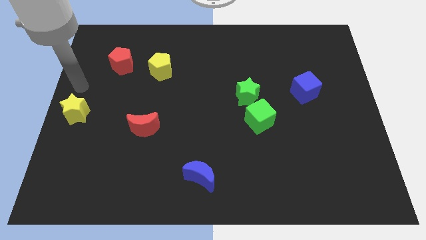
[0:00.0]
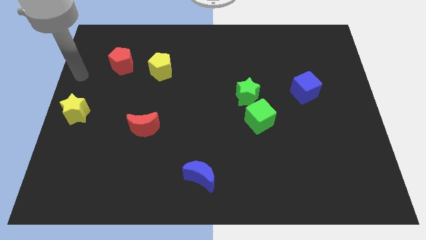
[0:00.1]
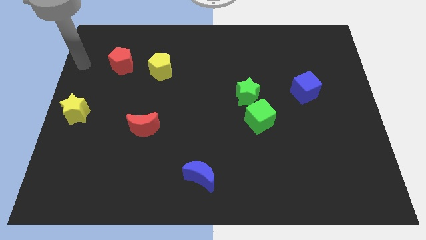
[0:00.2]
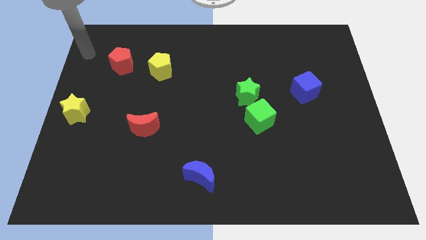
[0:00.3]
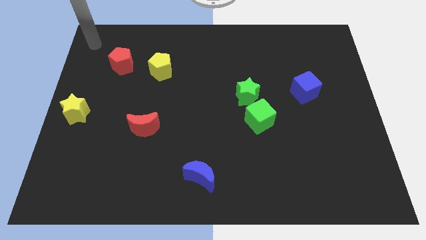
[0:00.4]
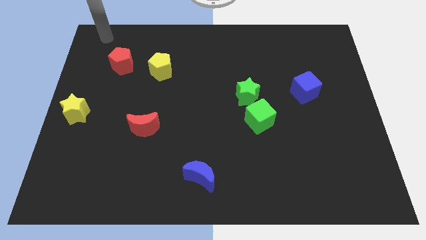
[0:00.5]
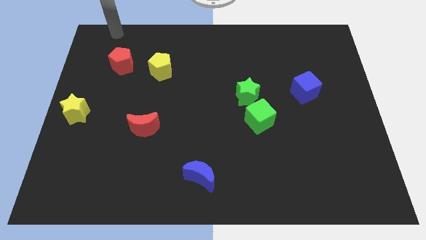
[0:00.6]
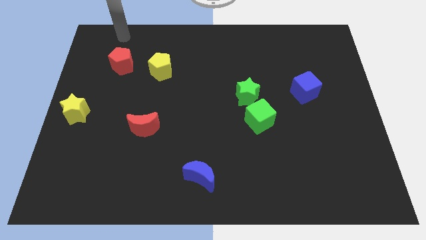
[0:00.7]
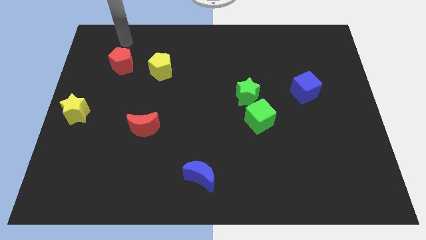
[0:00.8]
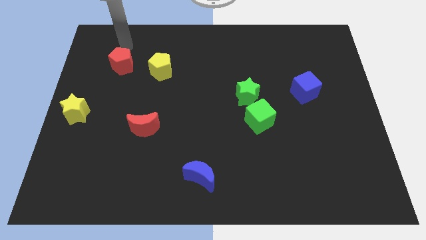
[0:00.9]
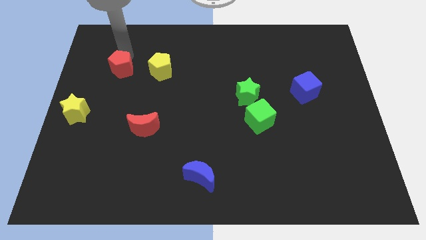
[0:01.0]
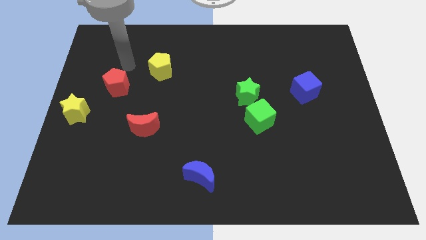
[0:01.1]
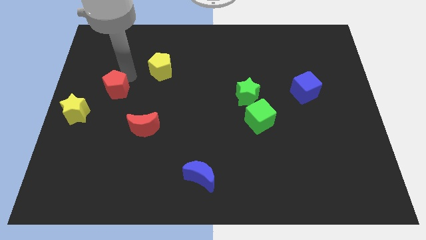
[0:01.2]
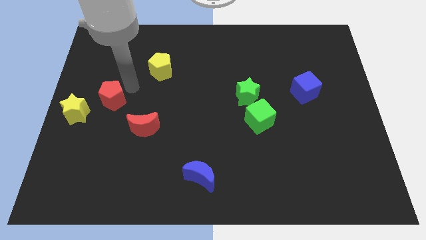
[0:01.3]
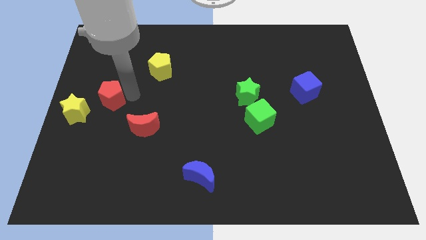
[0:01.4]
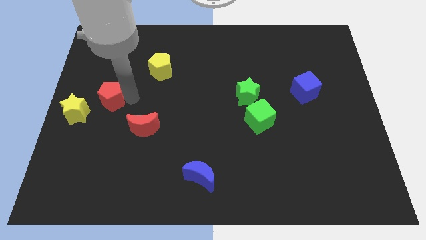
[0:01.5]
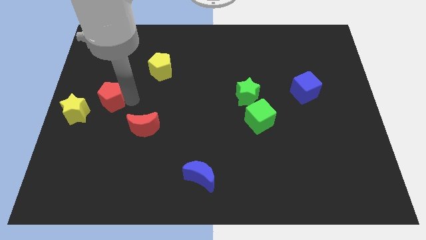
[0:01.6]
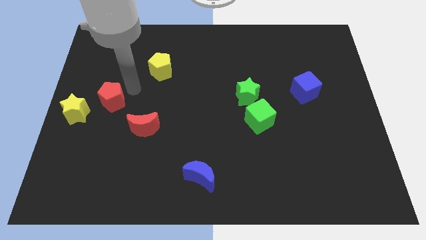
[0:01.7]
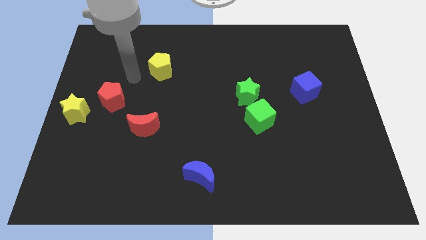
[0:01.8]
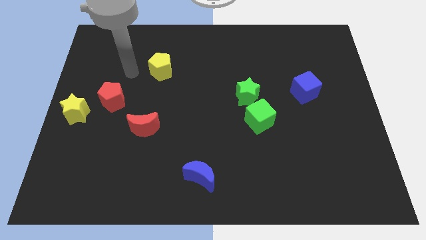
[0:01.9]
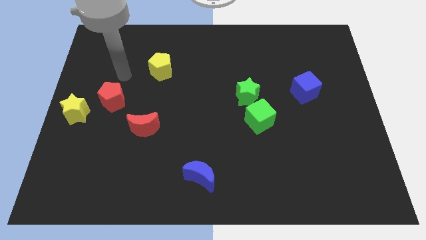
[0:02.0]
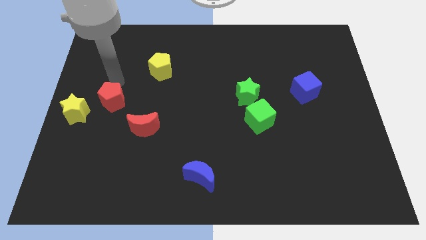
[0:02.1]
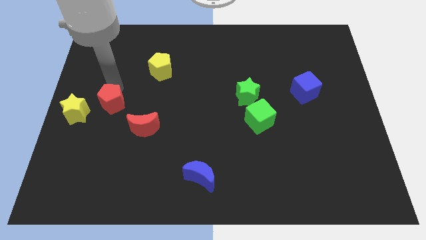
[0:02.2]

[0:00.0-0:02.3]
push the red pentagon to the top left of the red crescent

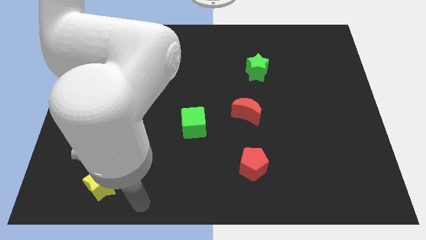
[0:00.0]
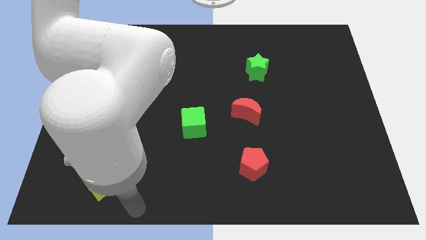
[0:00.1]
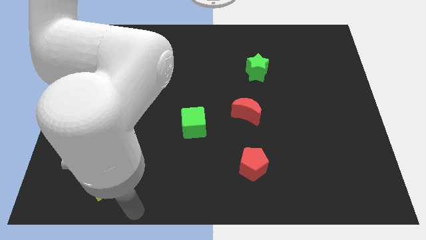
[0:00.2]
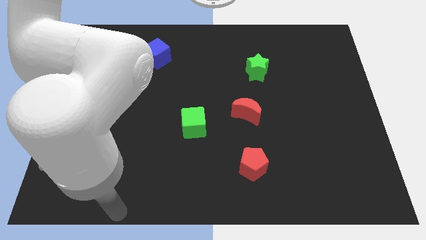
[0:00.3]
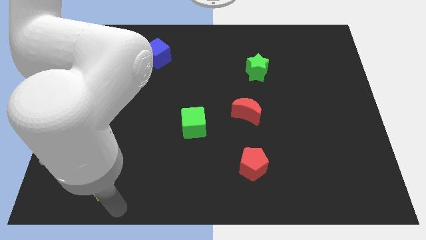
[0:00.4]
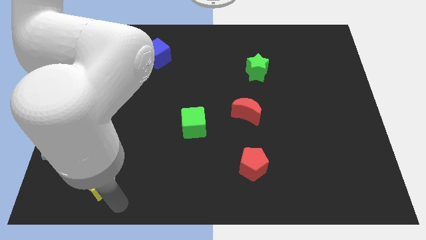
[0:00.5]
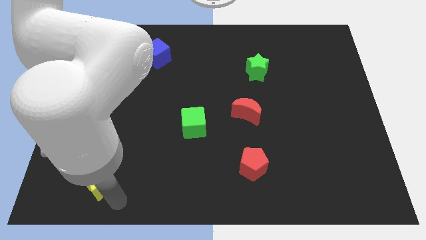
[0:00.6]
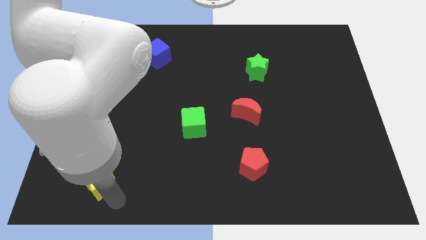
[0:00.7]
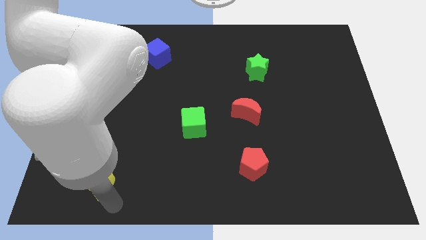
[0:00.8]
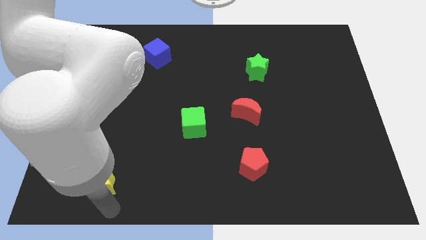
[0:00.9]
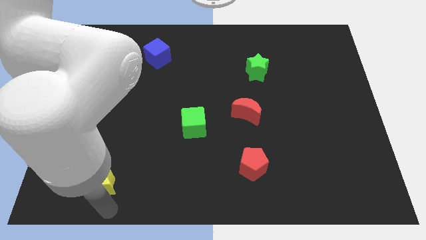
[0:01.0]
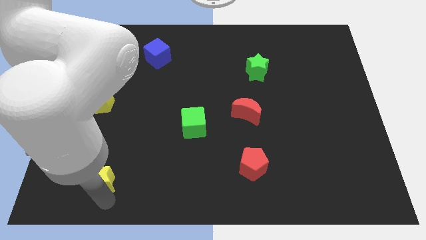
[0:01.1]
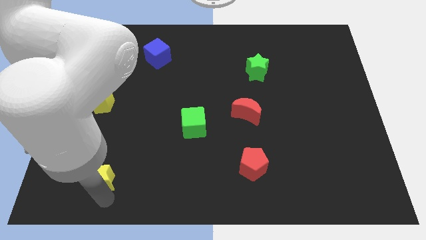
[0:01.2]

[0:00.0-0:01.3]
tap the yellow star

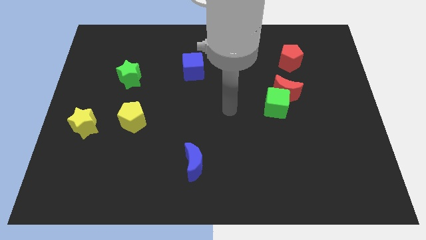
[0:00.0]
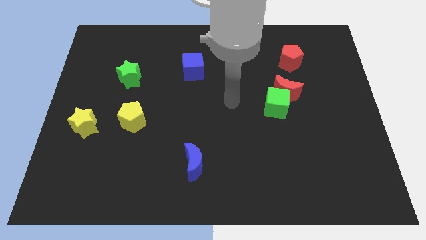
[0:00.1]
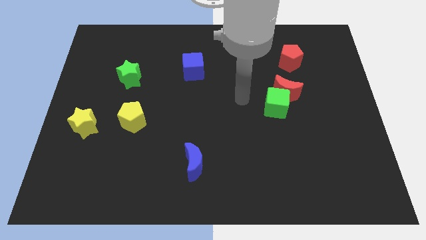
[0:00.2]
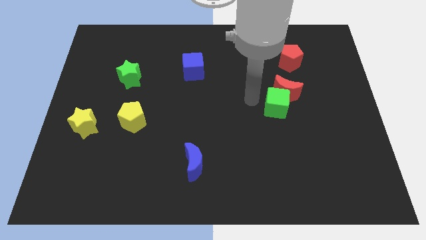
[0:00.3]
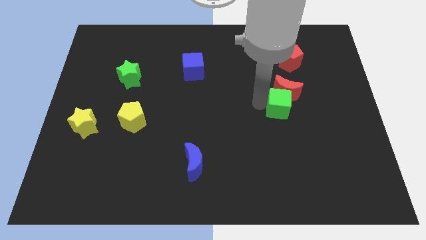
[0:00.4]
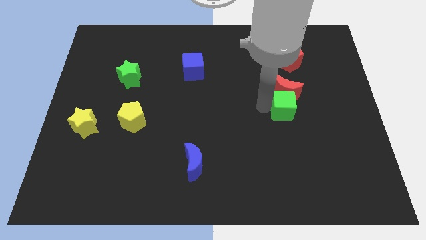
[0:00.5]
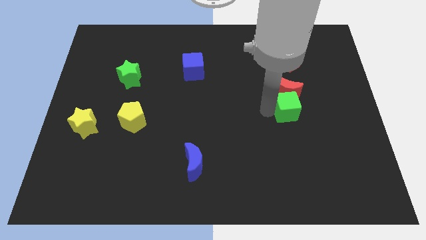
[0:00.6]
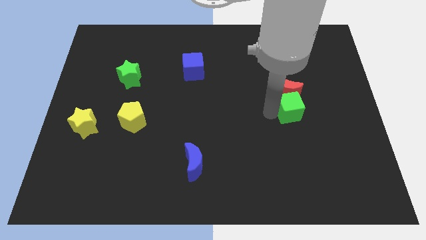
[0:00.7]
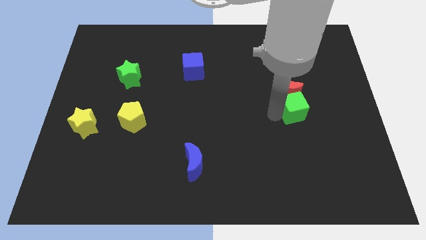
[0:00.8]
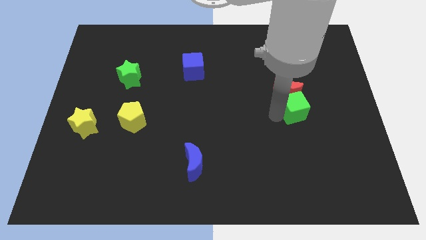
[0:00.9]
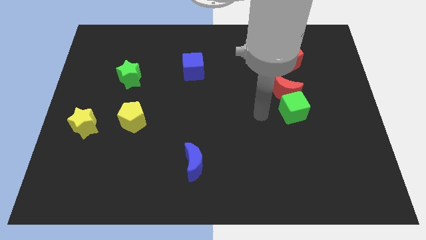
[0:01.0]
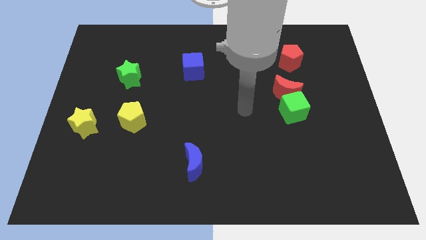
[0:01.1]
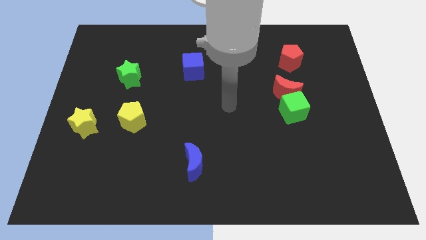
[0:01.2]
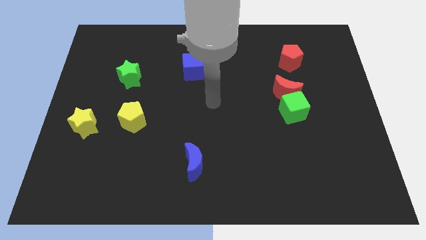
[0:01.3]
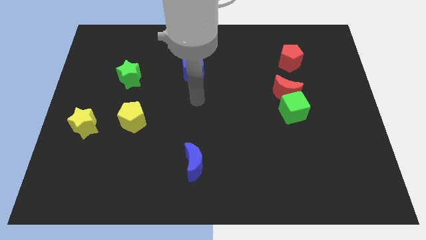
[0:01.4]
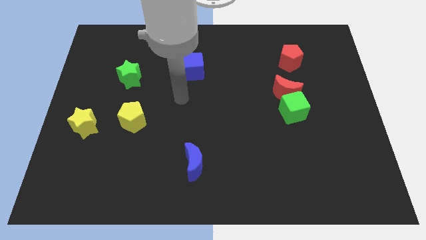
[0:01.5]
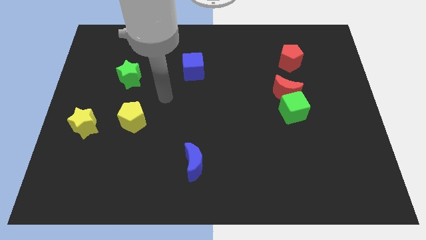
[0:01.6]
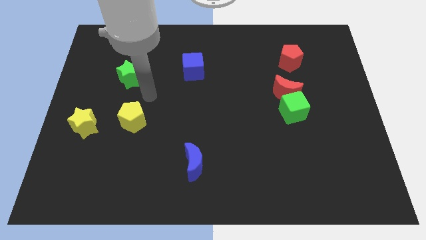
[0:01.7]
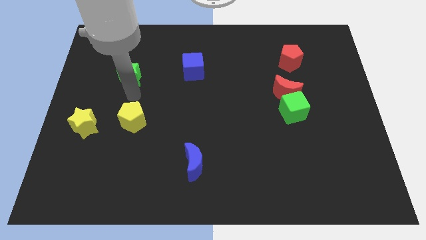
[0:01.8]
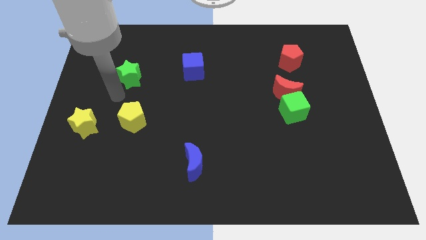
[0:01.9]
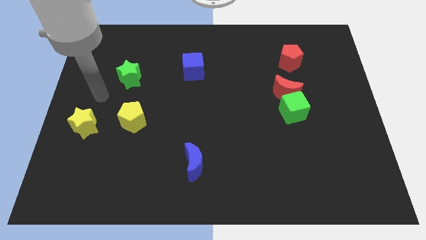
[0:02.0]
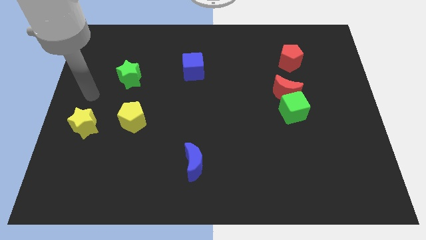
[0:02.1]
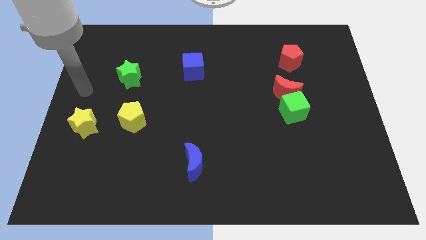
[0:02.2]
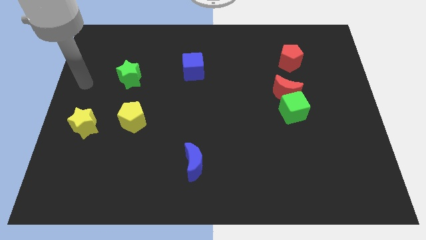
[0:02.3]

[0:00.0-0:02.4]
slightly push the green cube downward

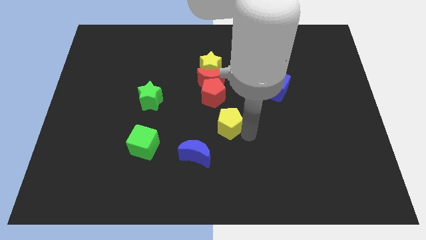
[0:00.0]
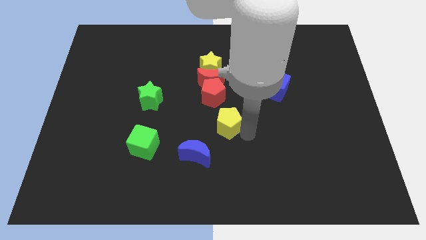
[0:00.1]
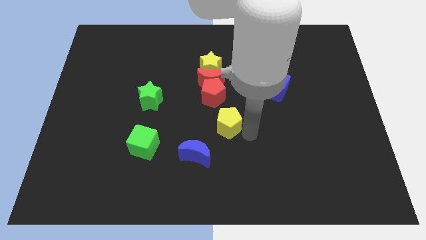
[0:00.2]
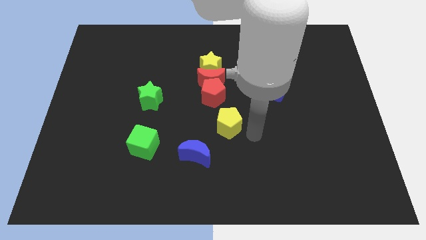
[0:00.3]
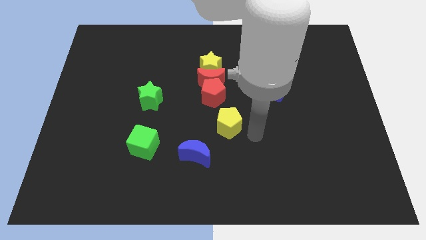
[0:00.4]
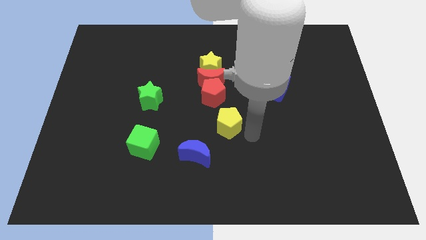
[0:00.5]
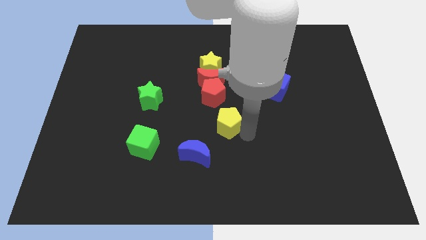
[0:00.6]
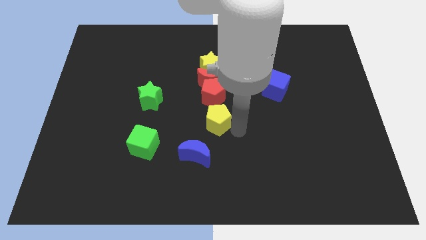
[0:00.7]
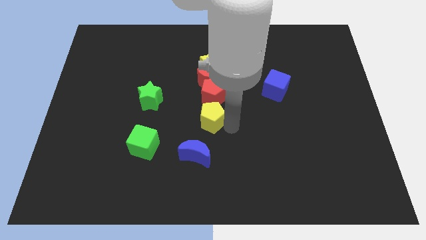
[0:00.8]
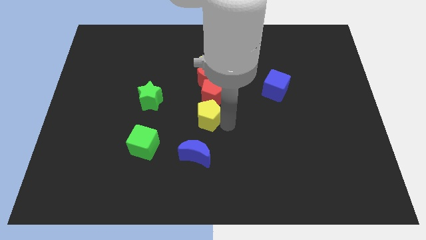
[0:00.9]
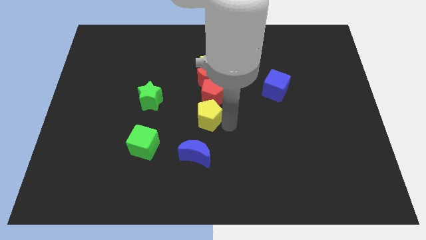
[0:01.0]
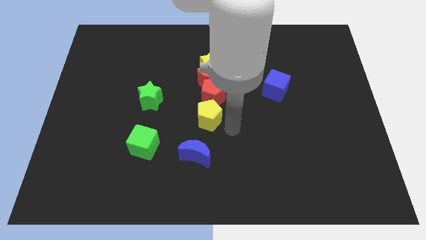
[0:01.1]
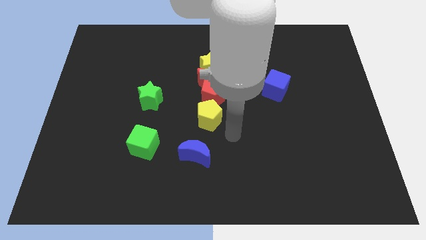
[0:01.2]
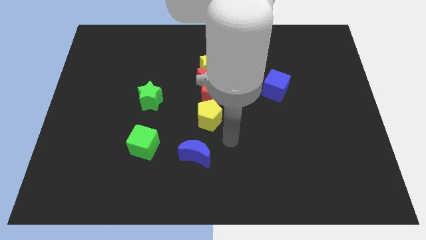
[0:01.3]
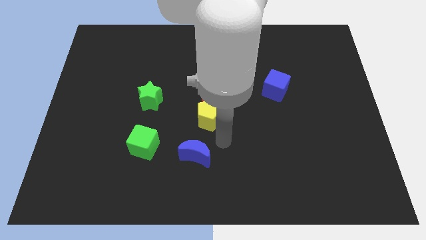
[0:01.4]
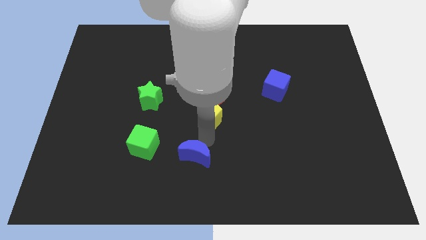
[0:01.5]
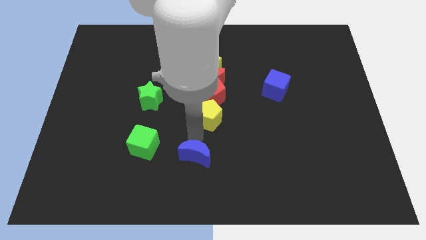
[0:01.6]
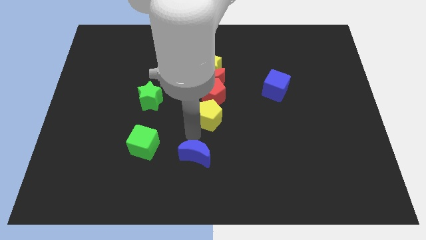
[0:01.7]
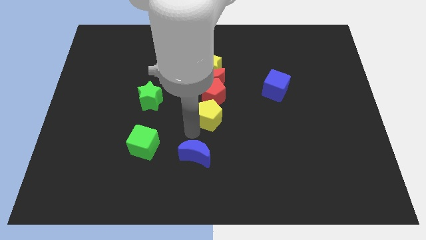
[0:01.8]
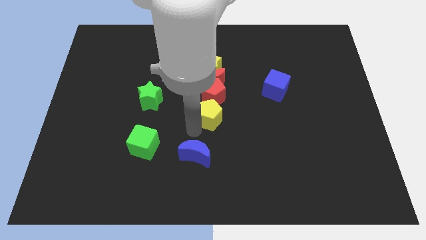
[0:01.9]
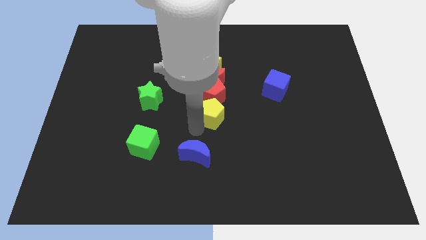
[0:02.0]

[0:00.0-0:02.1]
place the yellow pentagon below to the red pentagon

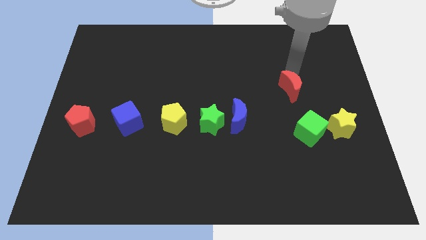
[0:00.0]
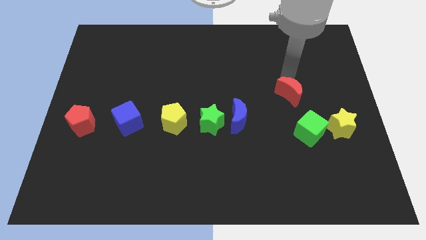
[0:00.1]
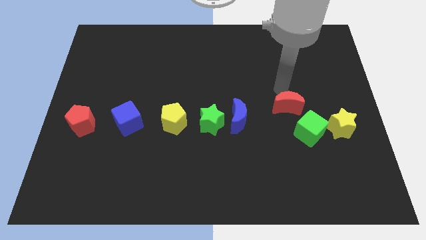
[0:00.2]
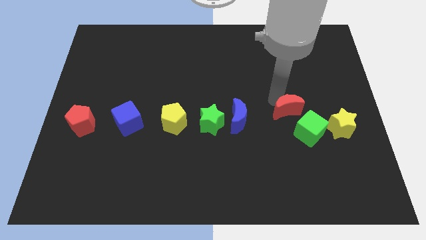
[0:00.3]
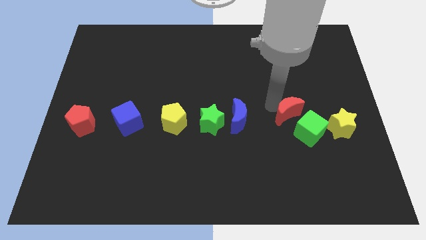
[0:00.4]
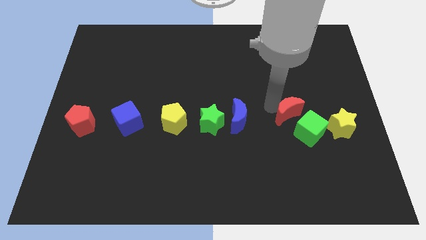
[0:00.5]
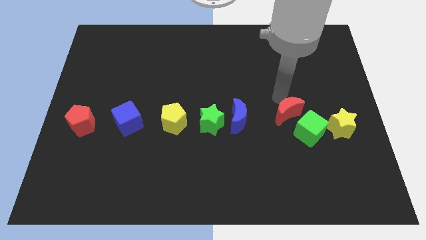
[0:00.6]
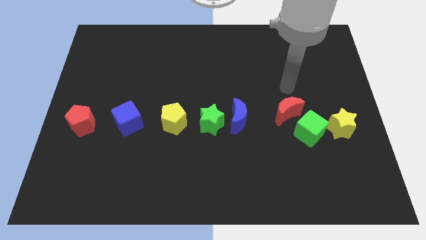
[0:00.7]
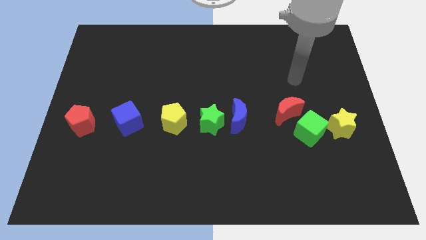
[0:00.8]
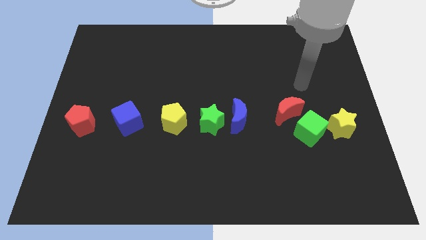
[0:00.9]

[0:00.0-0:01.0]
move the red moon close to the green cube
